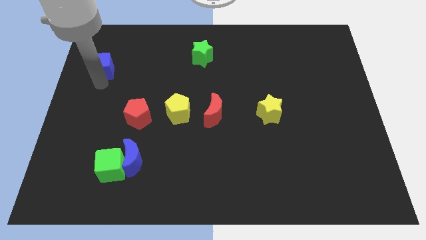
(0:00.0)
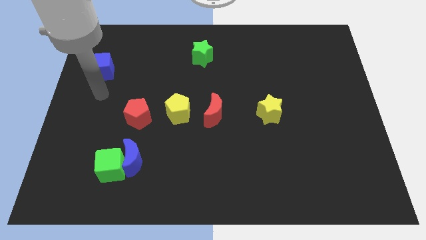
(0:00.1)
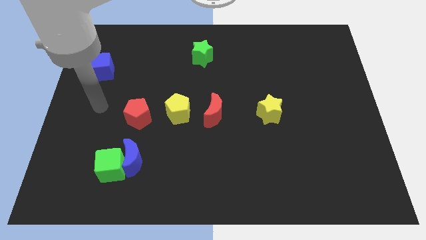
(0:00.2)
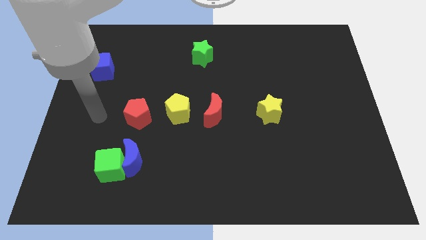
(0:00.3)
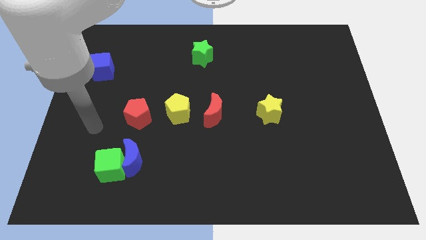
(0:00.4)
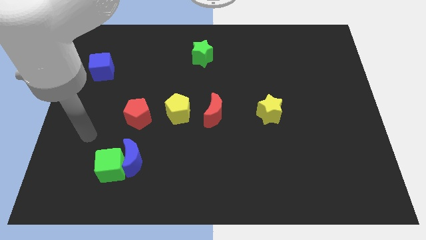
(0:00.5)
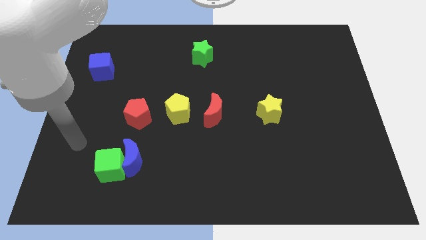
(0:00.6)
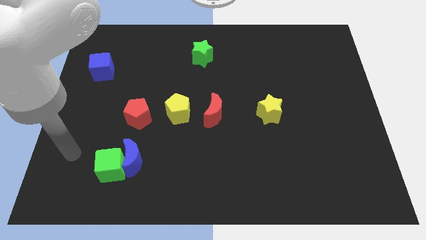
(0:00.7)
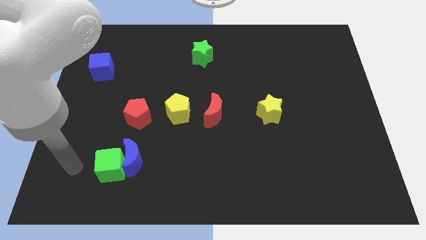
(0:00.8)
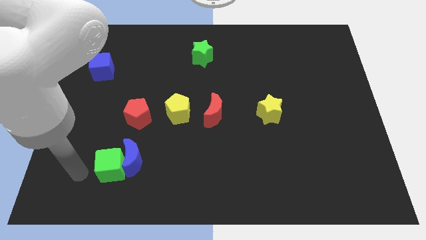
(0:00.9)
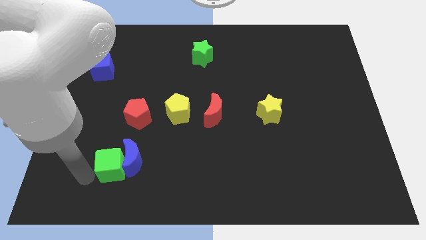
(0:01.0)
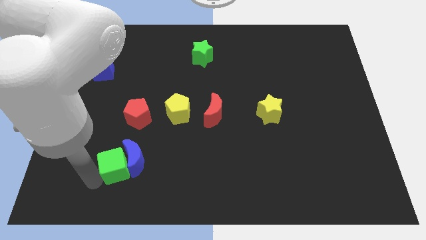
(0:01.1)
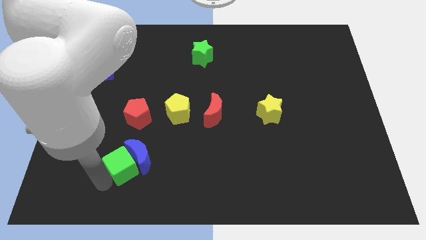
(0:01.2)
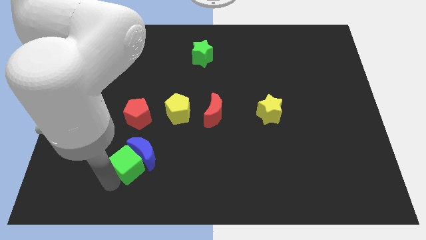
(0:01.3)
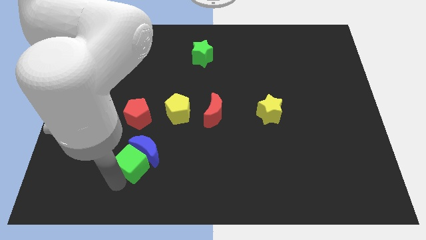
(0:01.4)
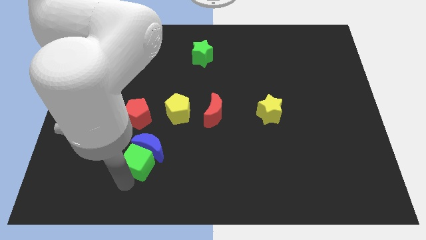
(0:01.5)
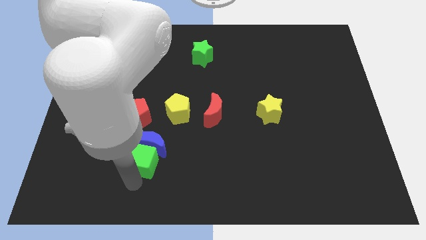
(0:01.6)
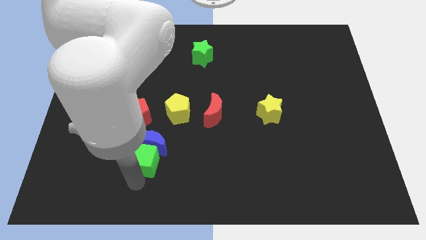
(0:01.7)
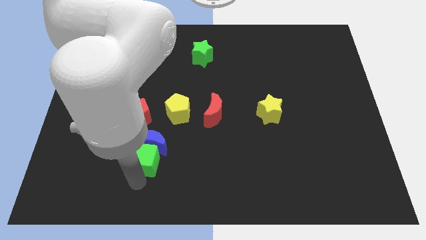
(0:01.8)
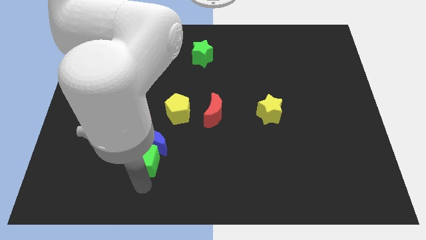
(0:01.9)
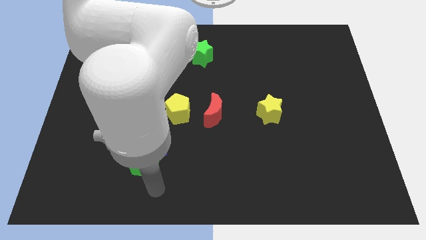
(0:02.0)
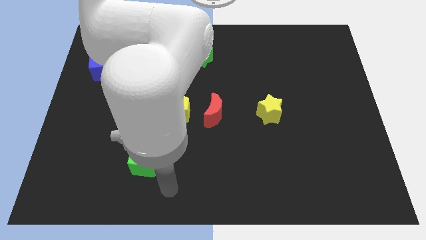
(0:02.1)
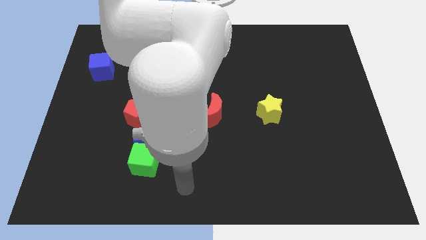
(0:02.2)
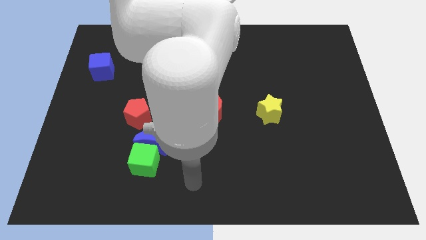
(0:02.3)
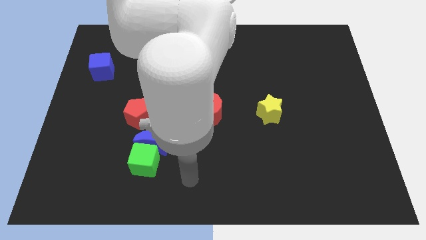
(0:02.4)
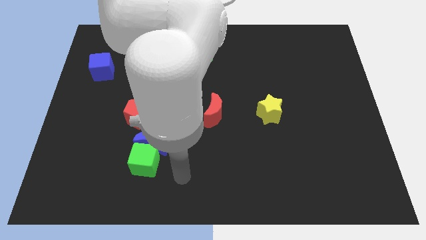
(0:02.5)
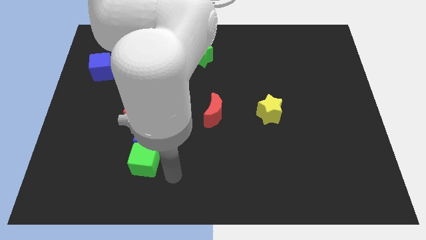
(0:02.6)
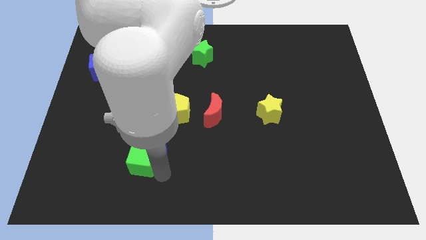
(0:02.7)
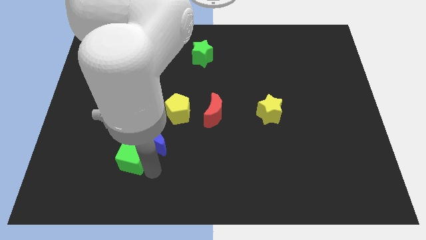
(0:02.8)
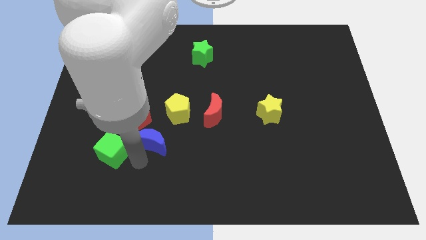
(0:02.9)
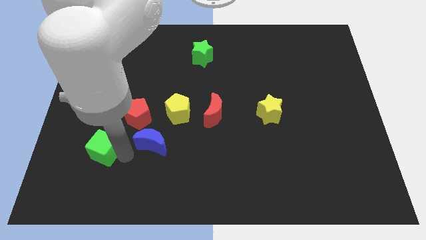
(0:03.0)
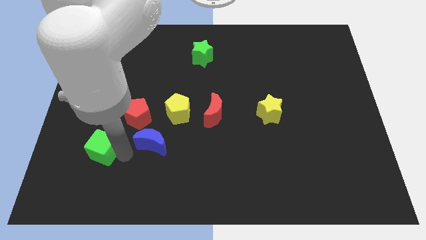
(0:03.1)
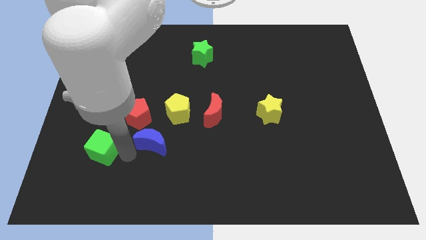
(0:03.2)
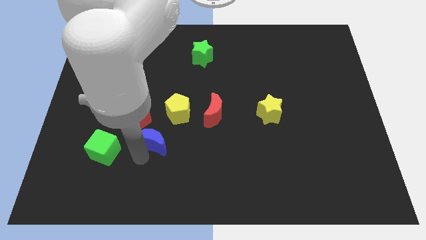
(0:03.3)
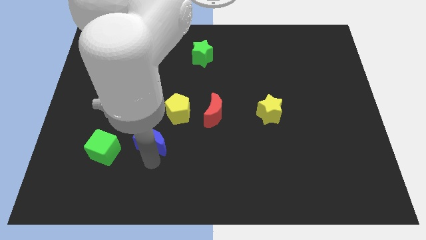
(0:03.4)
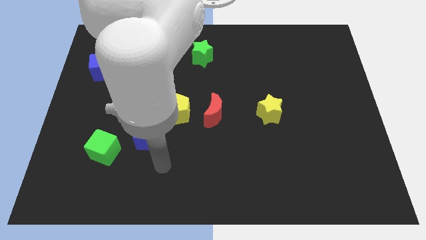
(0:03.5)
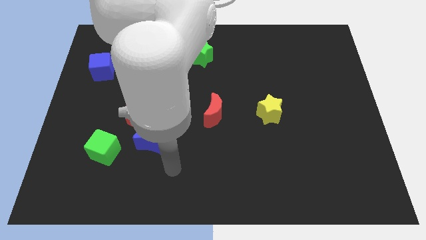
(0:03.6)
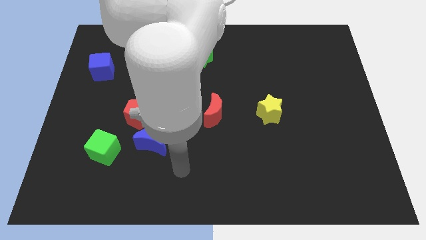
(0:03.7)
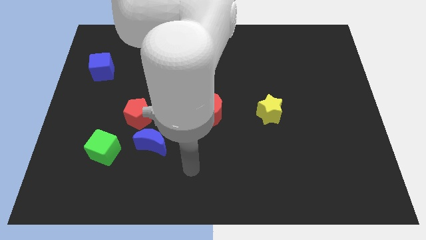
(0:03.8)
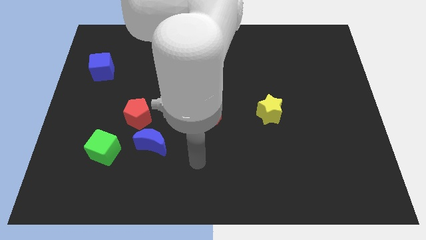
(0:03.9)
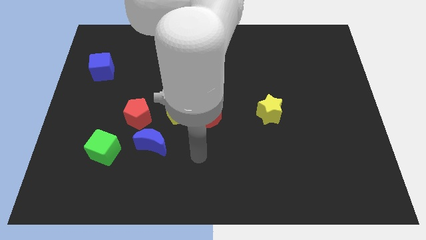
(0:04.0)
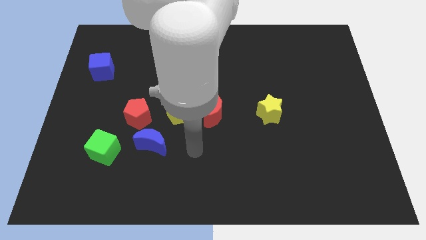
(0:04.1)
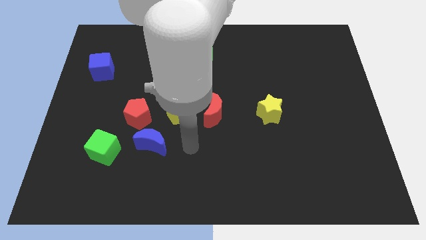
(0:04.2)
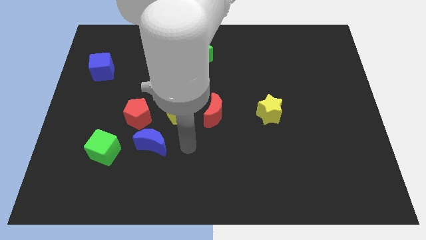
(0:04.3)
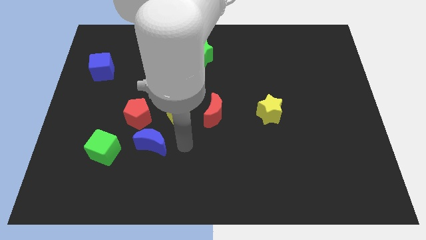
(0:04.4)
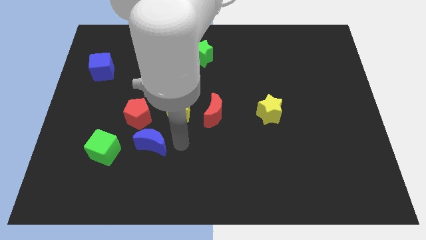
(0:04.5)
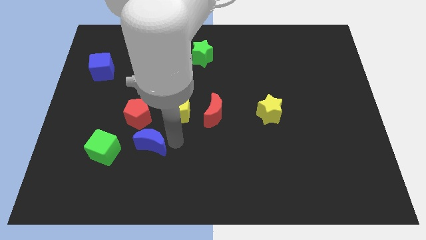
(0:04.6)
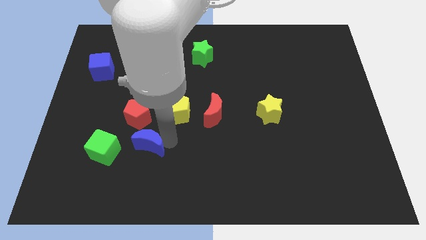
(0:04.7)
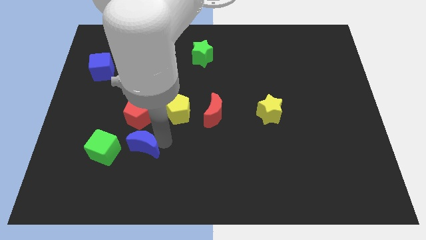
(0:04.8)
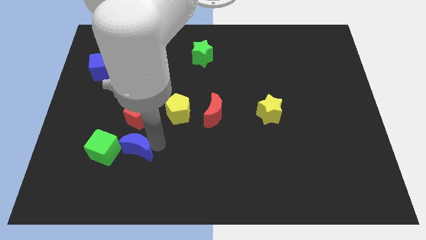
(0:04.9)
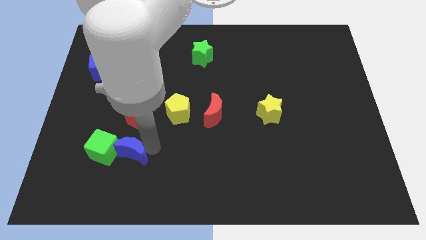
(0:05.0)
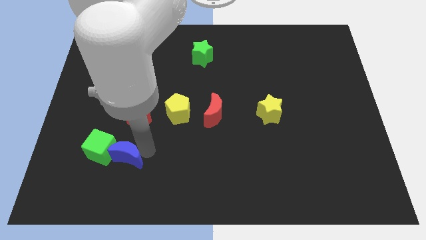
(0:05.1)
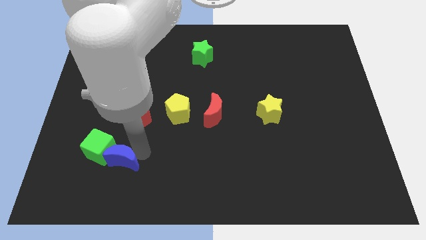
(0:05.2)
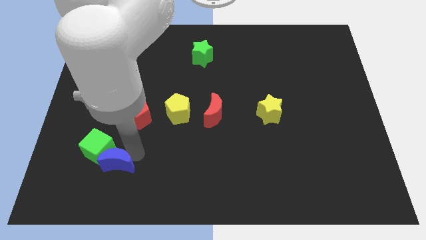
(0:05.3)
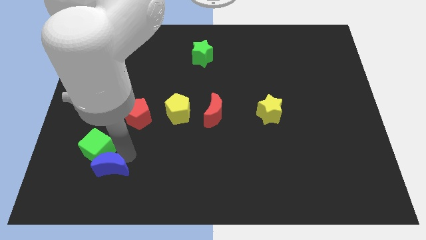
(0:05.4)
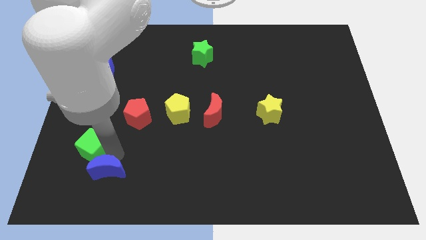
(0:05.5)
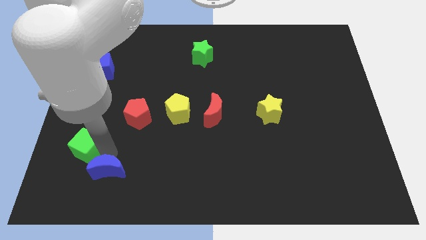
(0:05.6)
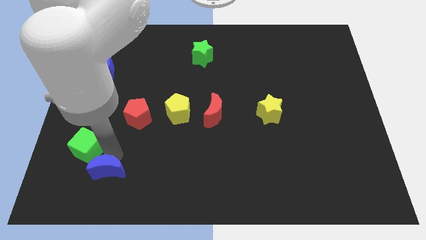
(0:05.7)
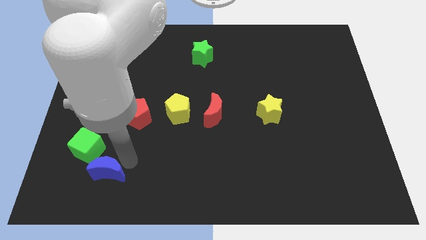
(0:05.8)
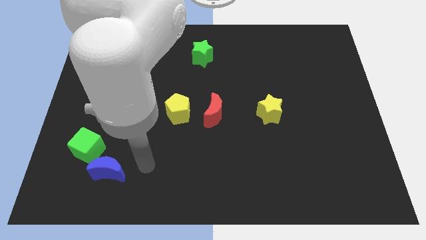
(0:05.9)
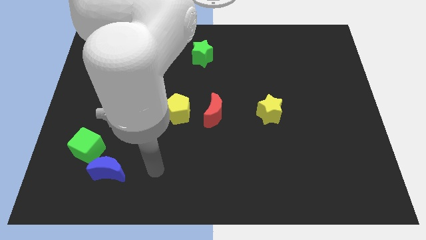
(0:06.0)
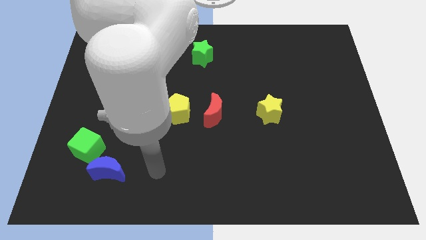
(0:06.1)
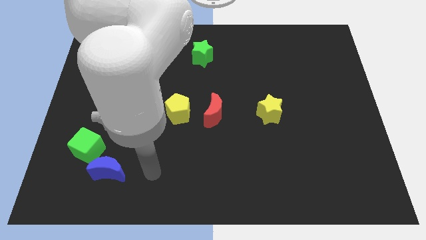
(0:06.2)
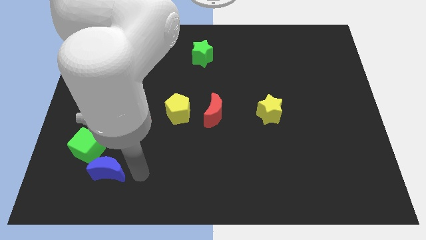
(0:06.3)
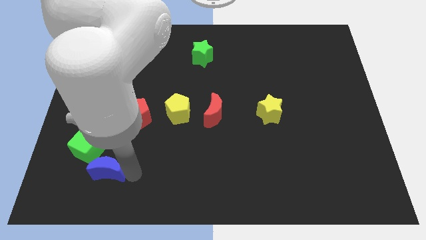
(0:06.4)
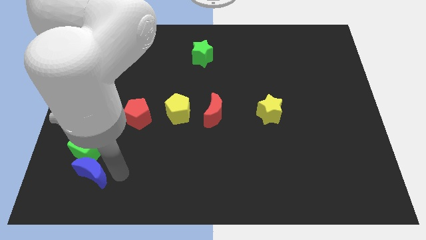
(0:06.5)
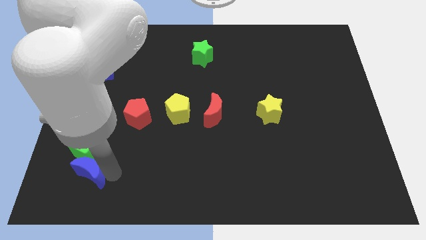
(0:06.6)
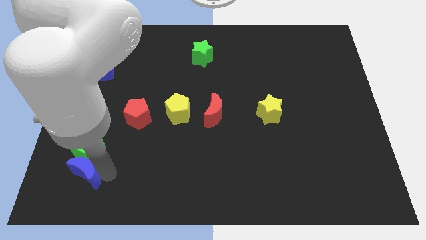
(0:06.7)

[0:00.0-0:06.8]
move the green cube and blue crescent to the left side of the table

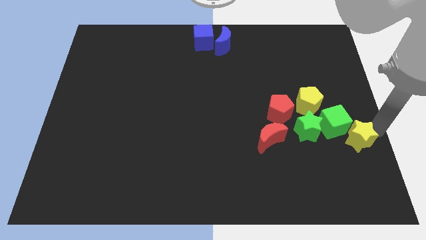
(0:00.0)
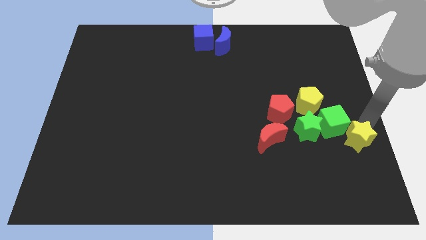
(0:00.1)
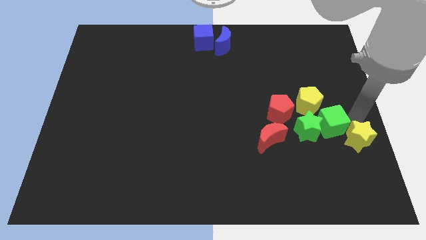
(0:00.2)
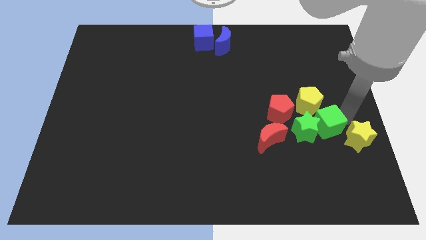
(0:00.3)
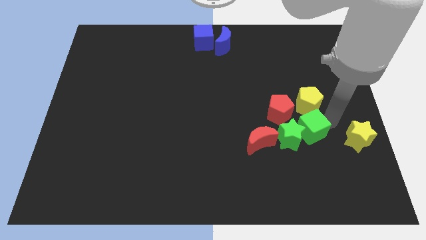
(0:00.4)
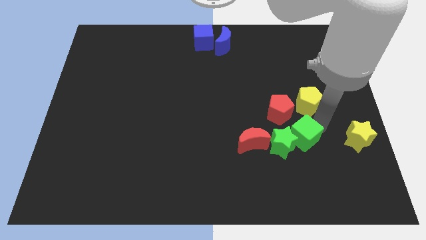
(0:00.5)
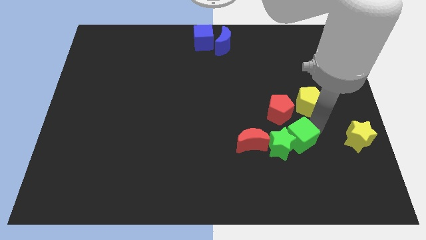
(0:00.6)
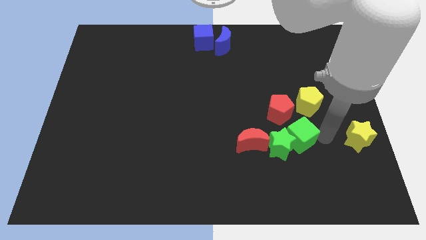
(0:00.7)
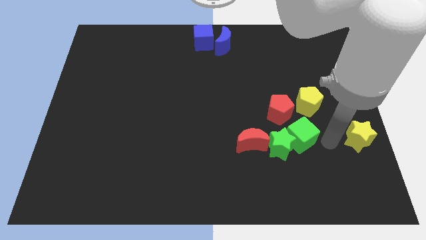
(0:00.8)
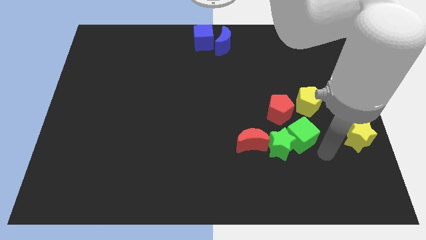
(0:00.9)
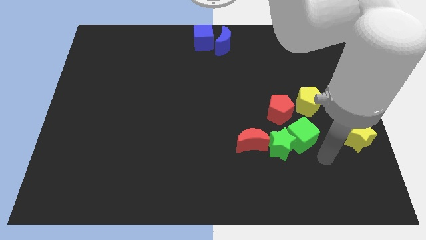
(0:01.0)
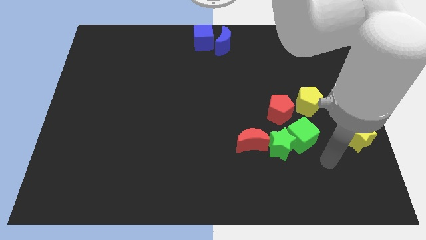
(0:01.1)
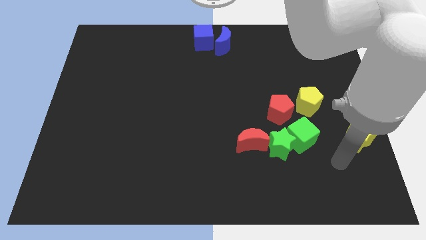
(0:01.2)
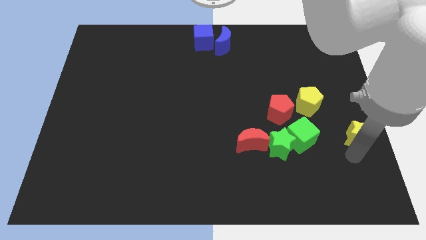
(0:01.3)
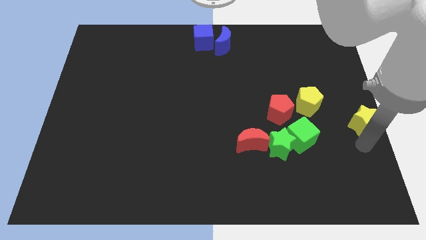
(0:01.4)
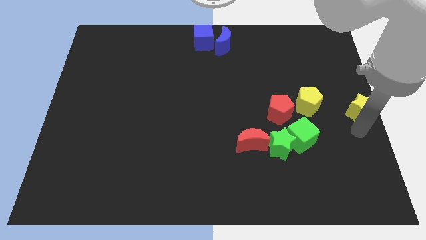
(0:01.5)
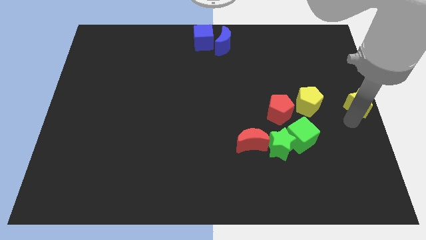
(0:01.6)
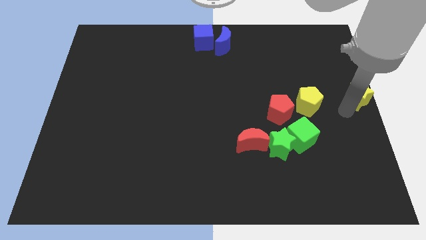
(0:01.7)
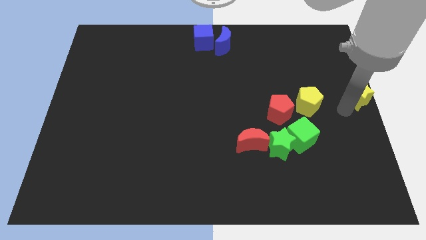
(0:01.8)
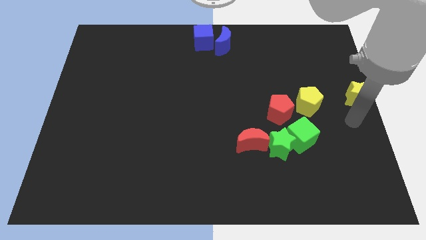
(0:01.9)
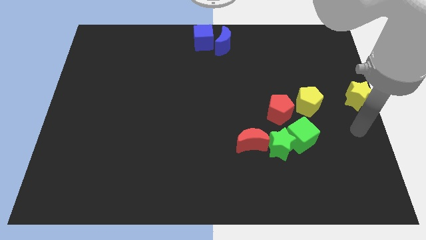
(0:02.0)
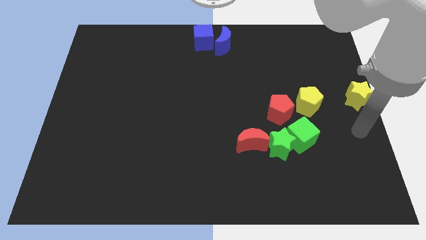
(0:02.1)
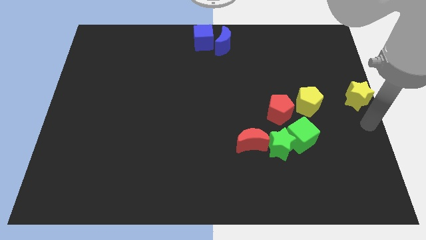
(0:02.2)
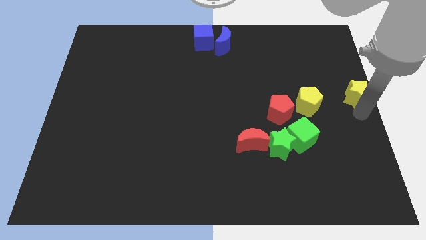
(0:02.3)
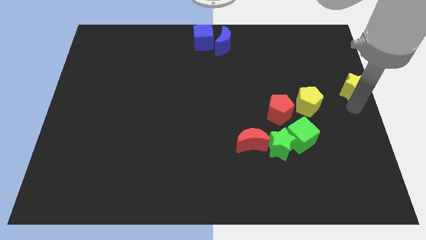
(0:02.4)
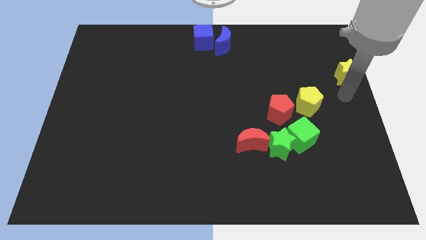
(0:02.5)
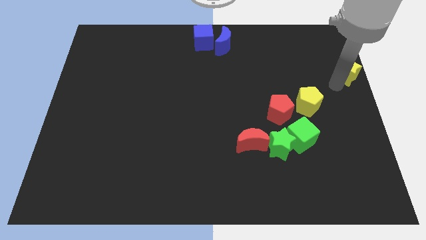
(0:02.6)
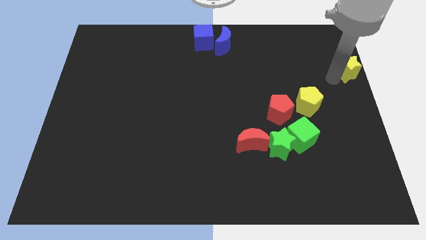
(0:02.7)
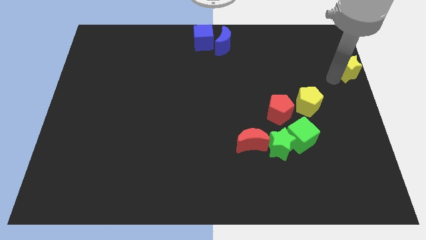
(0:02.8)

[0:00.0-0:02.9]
place the yellow star at the top right of the yellow pentagon
